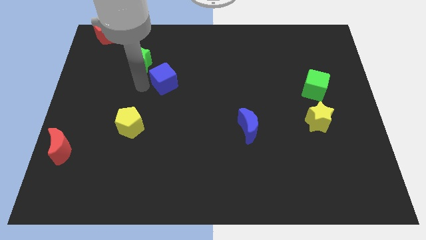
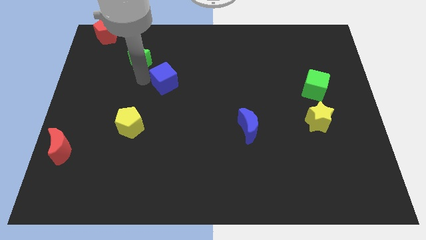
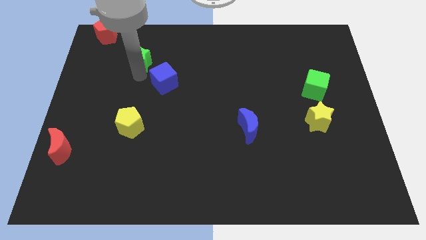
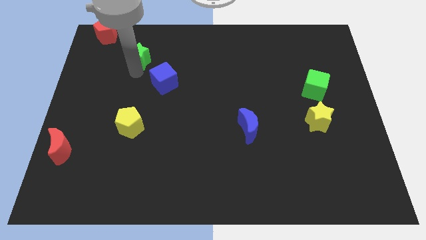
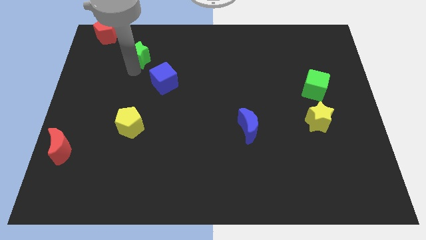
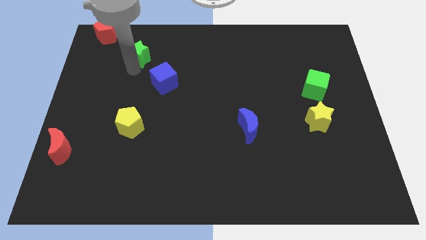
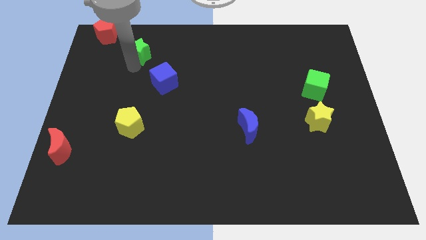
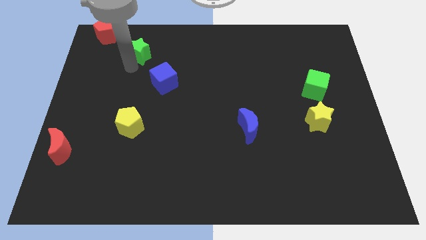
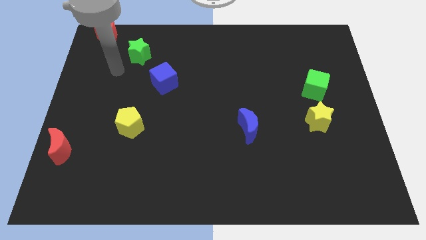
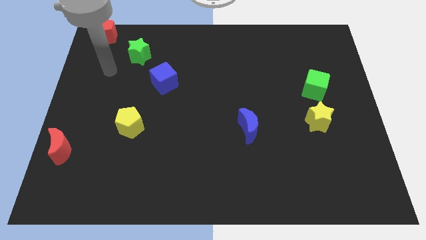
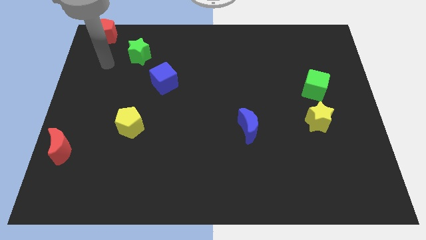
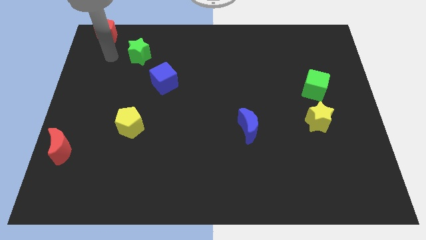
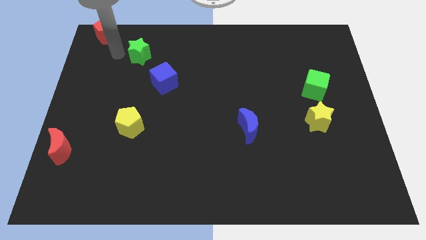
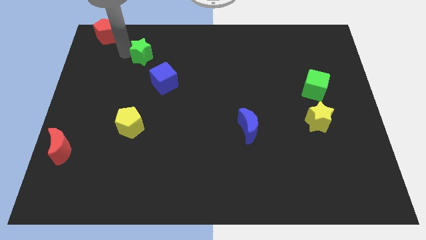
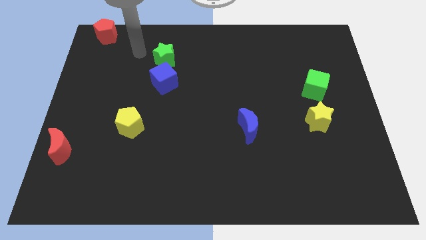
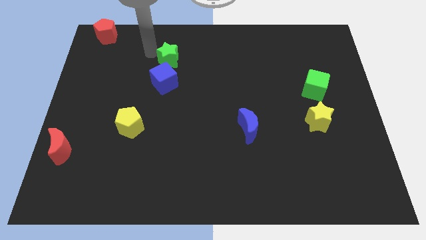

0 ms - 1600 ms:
move the green star vertically above the blue cube

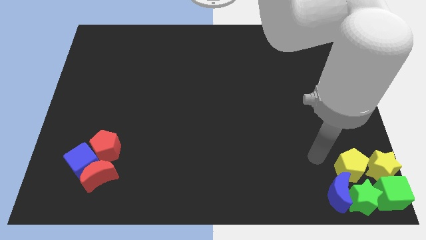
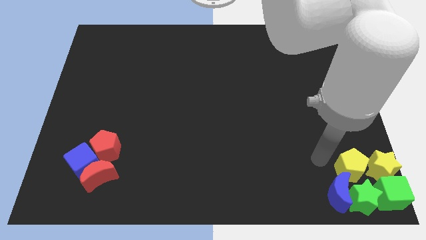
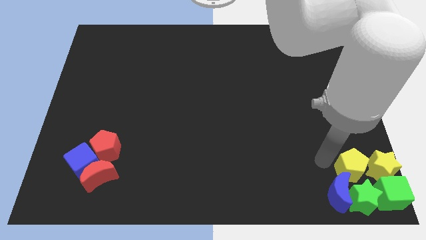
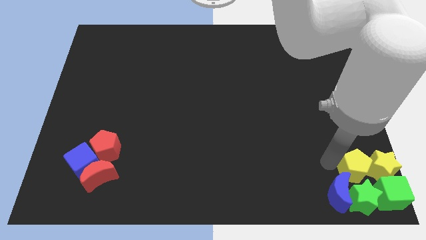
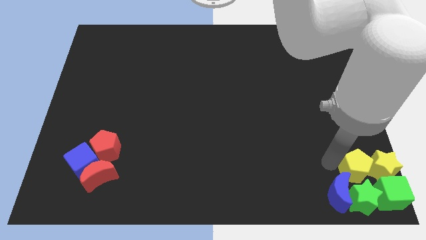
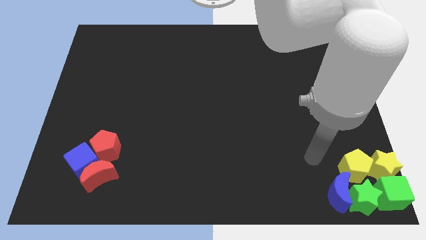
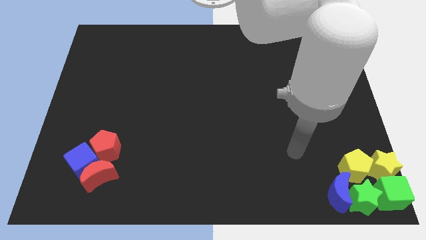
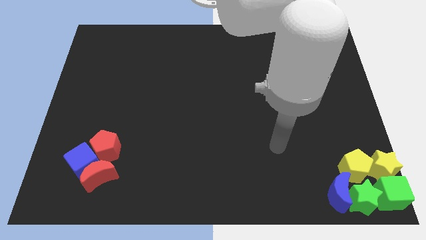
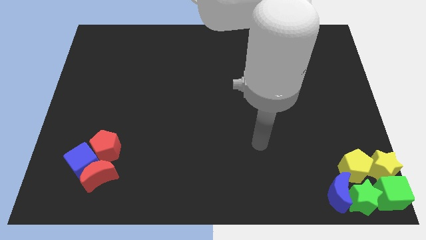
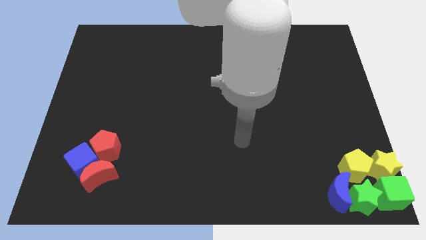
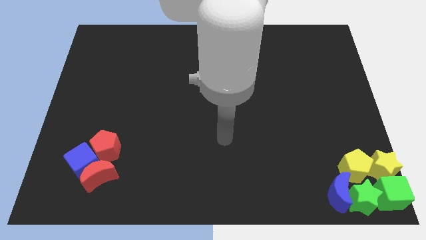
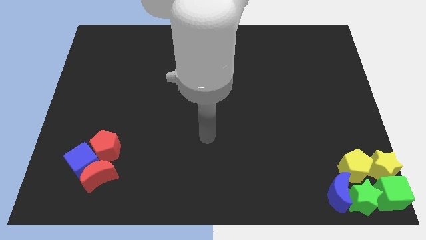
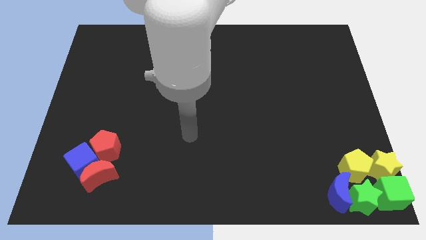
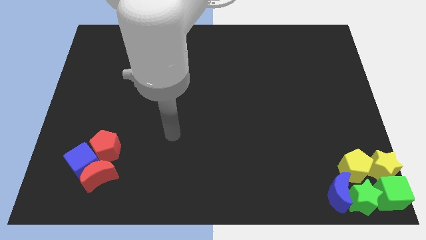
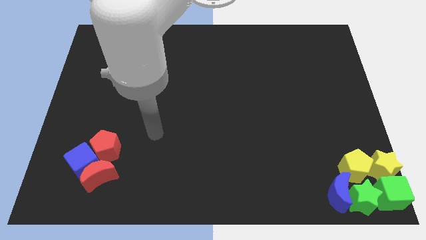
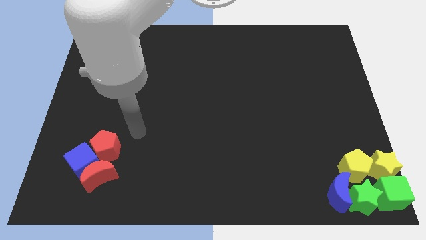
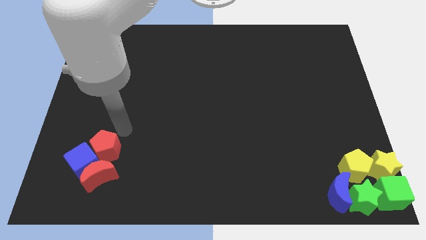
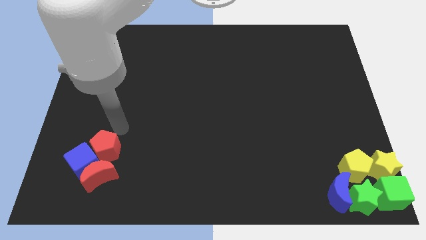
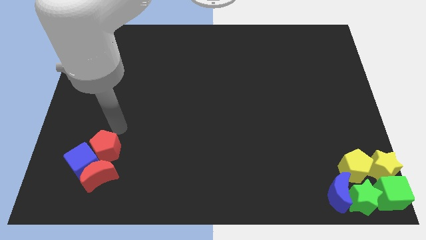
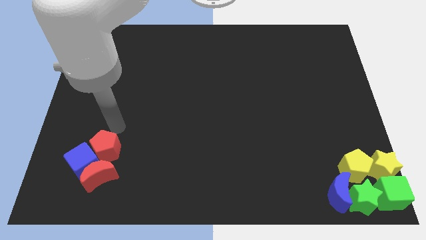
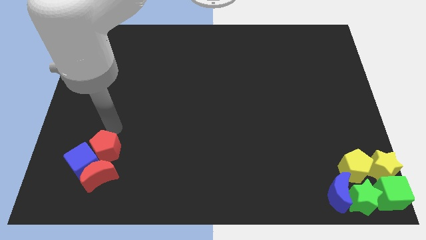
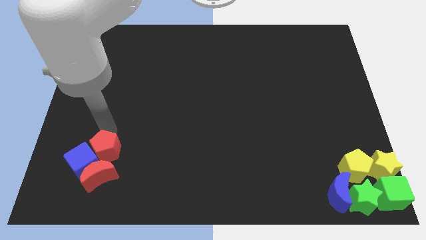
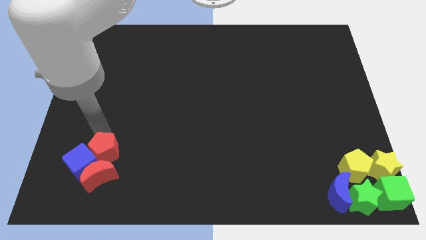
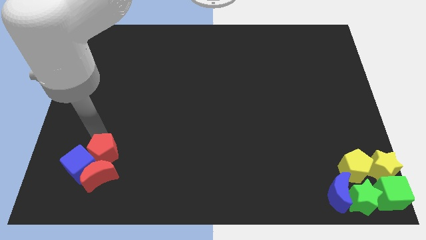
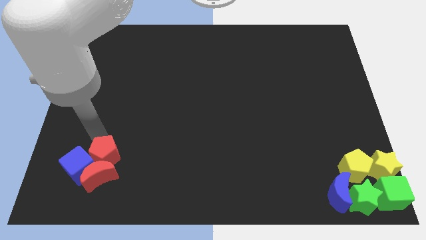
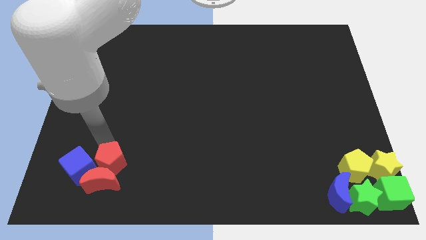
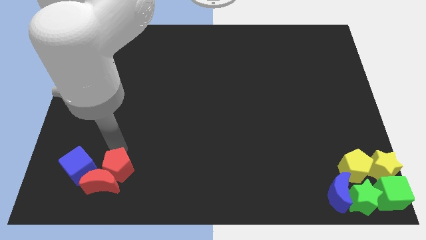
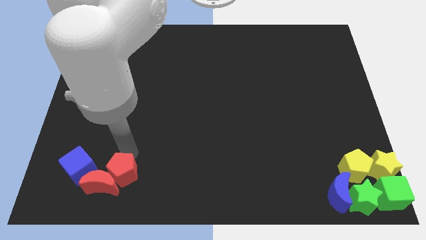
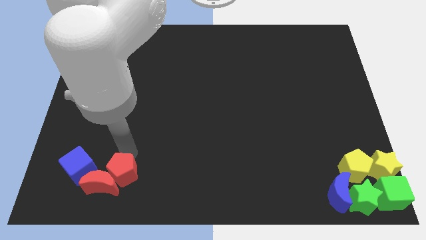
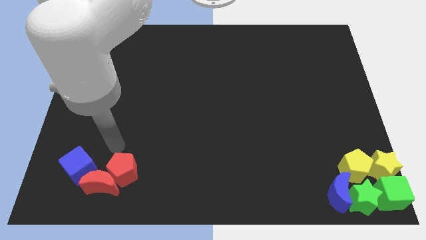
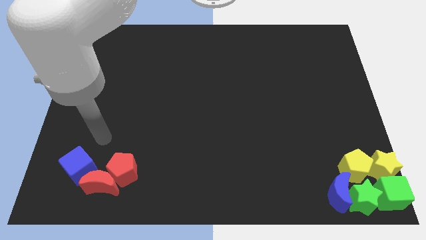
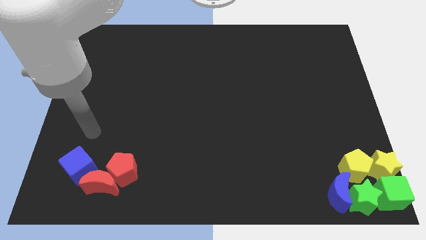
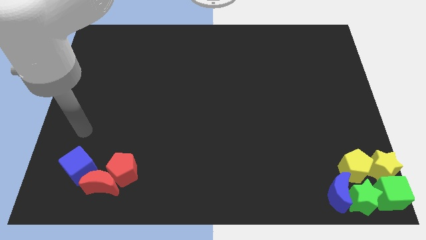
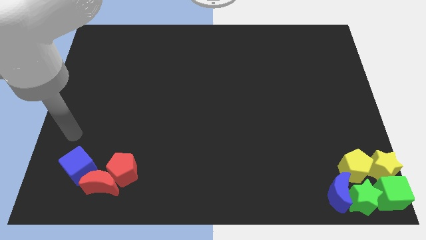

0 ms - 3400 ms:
separate the blue cube and red pentagon

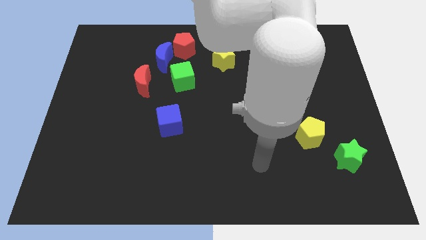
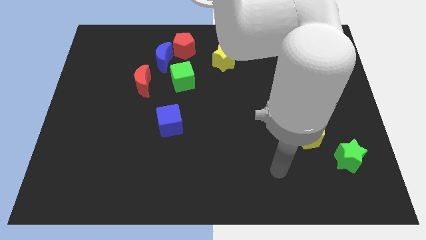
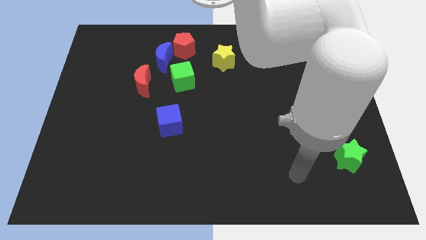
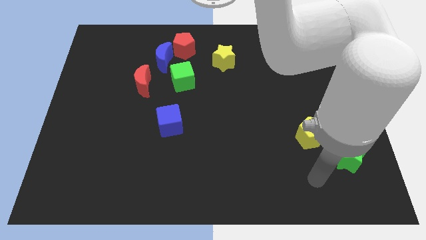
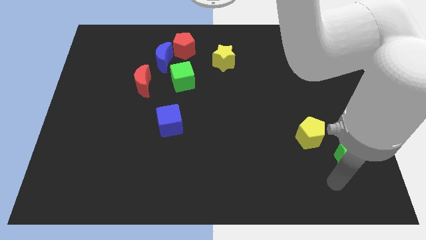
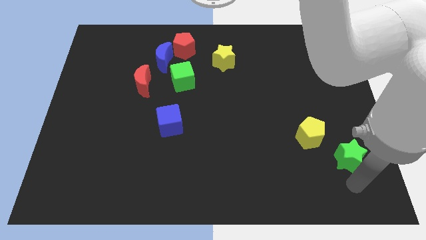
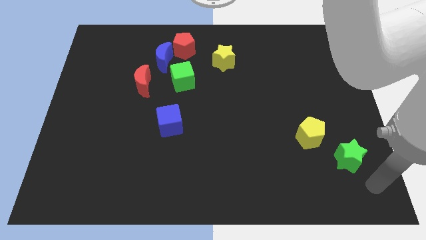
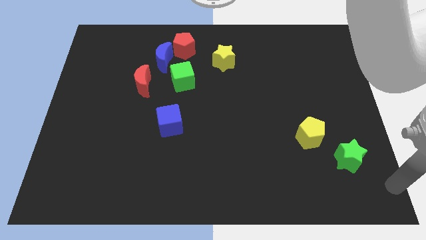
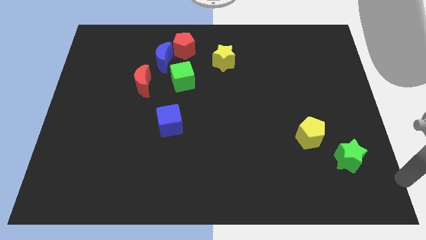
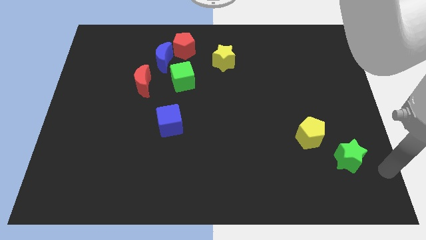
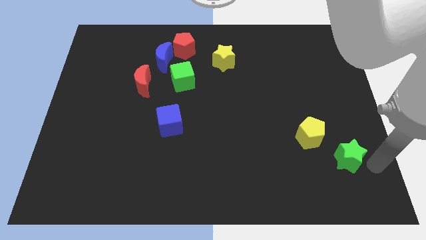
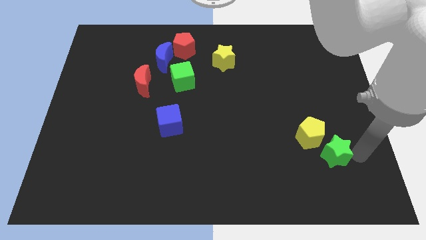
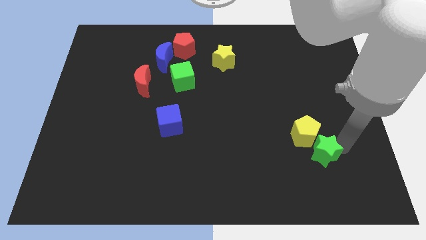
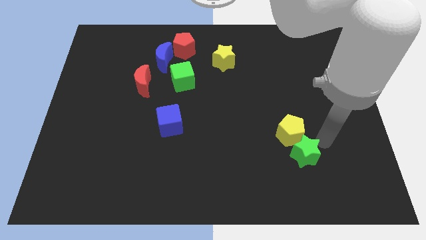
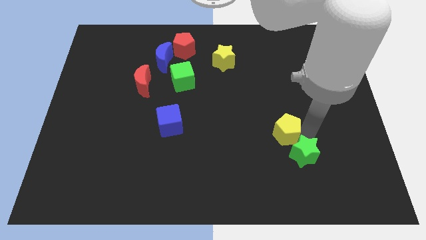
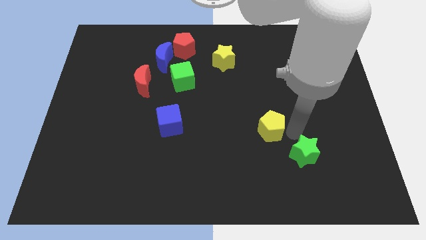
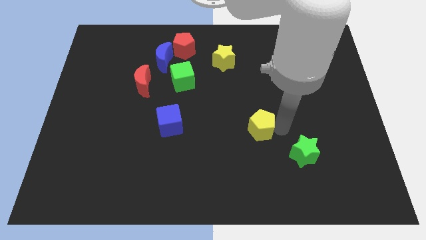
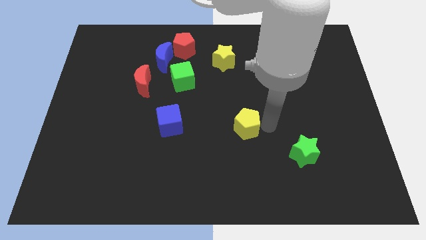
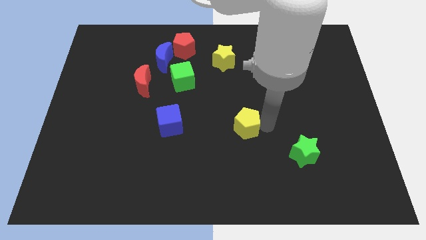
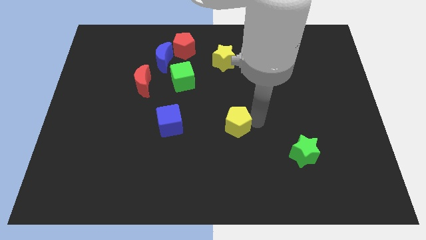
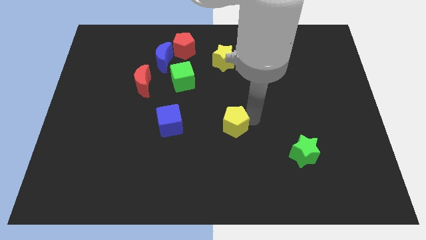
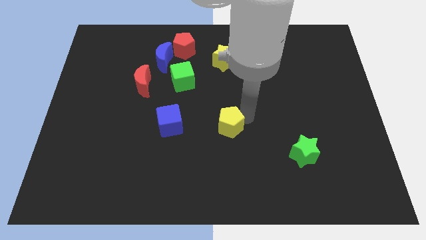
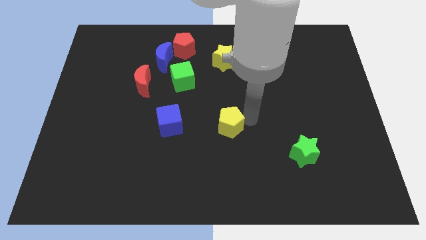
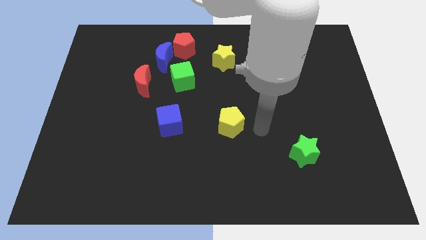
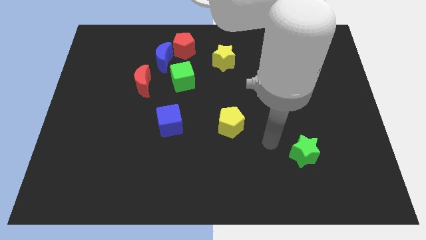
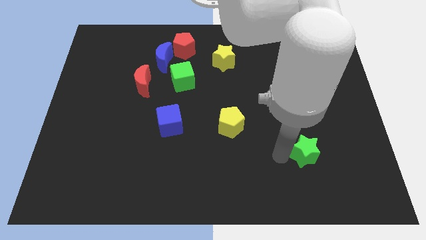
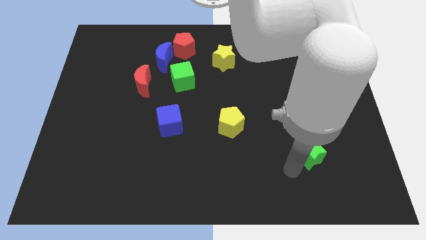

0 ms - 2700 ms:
push the yellow pentagon to the center of the board

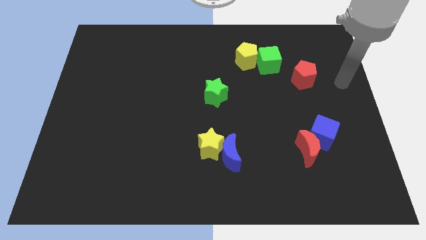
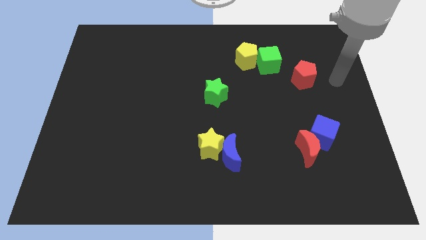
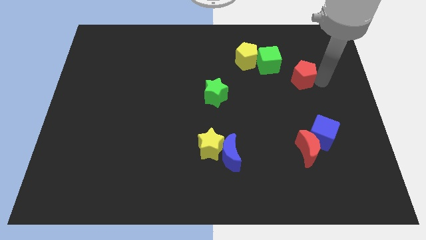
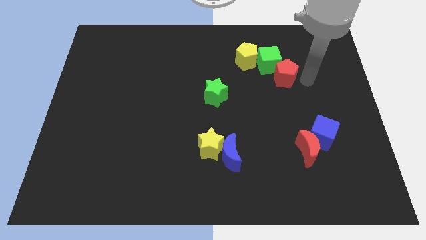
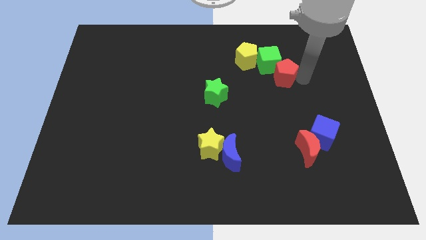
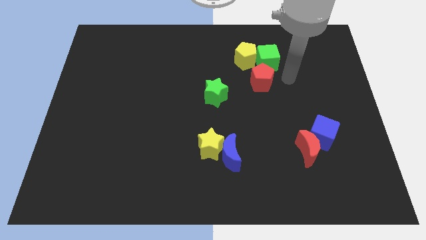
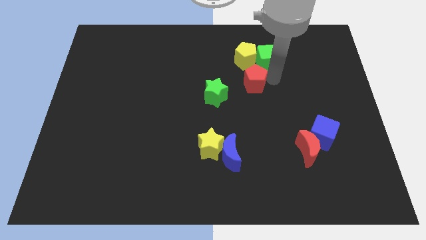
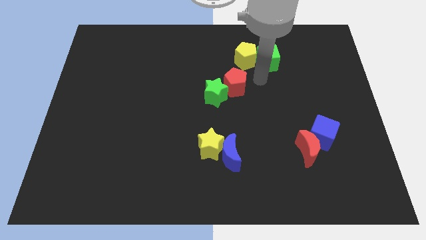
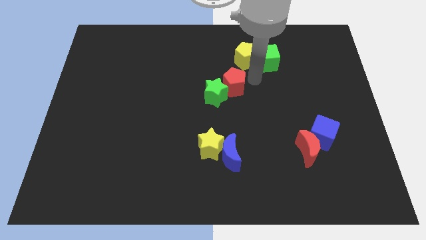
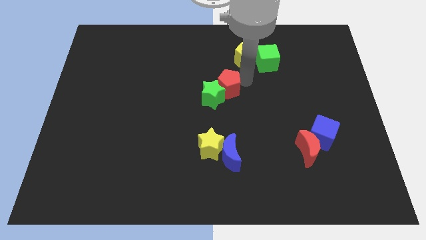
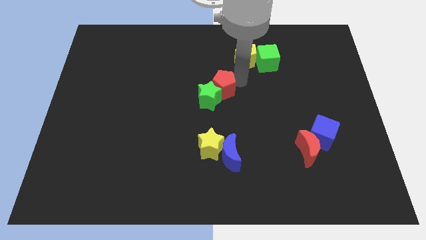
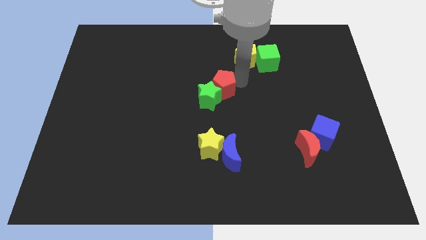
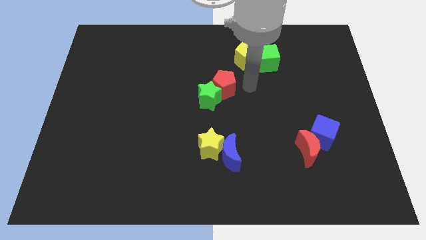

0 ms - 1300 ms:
push the red pentagon to the top right of the green star

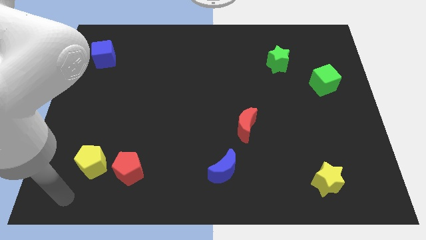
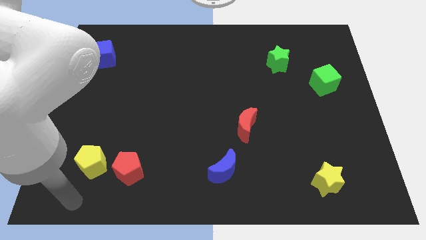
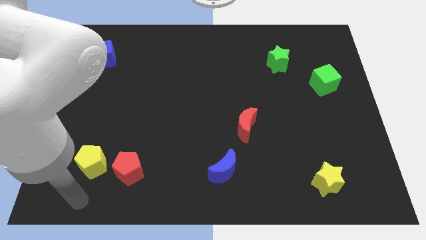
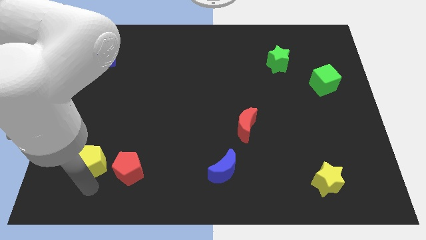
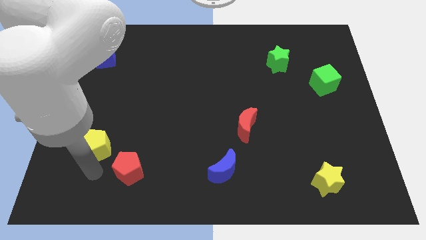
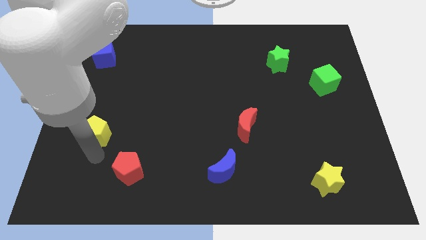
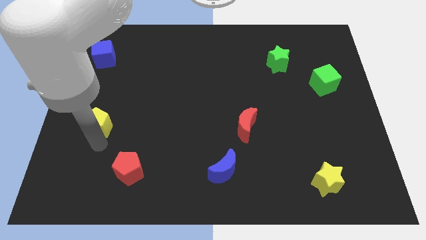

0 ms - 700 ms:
place yellow pentagon to the top left of red crescent
